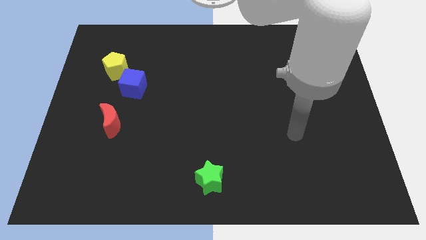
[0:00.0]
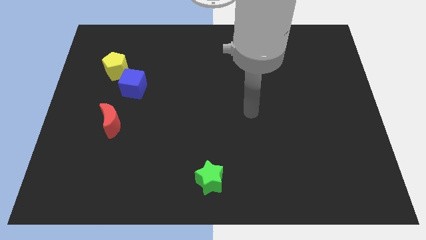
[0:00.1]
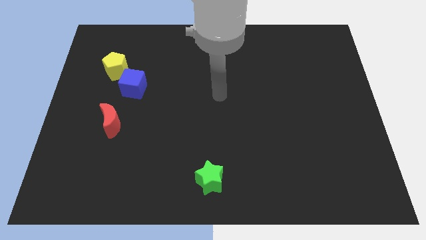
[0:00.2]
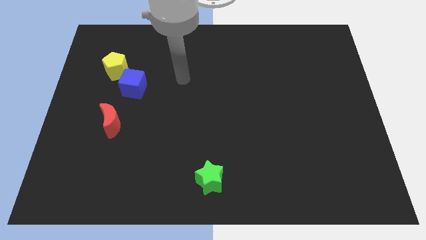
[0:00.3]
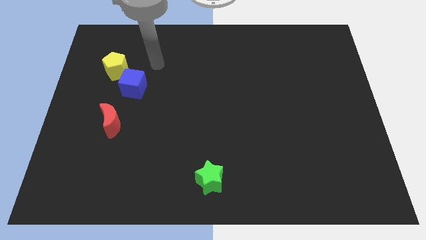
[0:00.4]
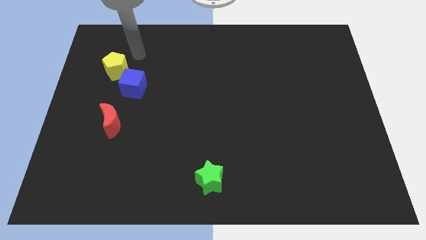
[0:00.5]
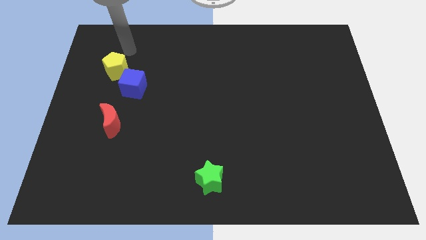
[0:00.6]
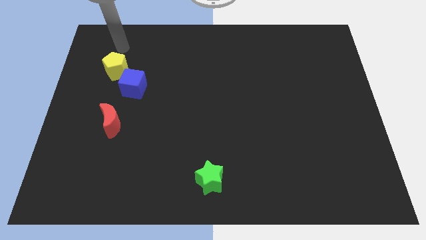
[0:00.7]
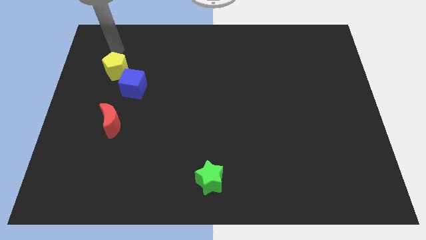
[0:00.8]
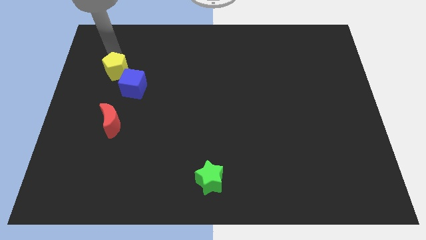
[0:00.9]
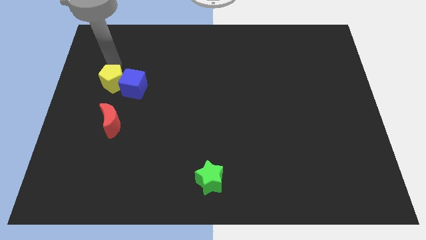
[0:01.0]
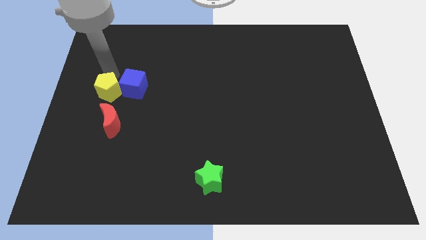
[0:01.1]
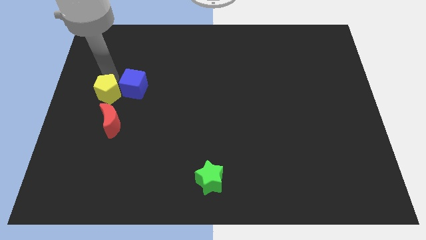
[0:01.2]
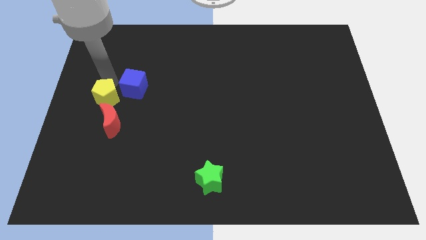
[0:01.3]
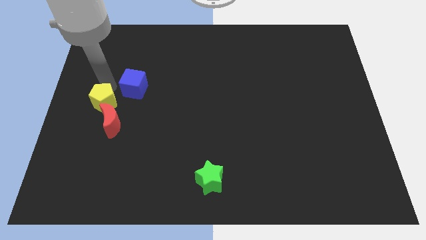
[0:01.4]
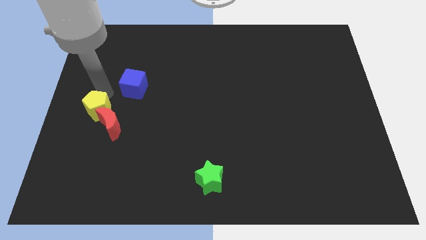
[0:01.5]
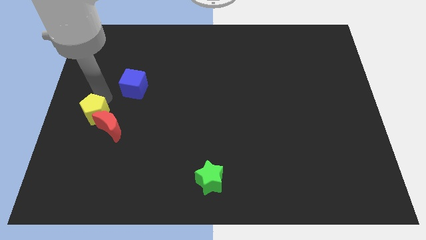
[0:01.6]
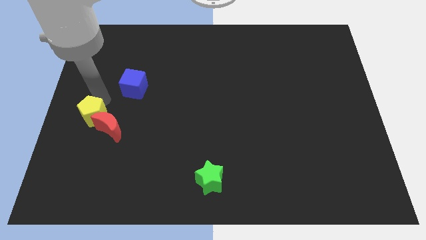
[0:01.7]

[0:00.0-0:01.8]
push the pentagon to the red block

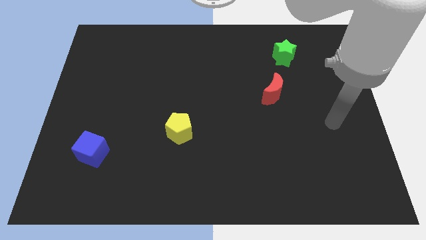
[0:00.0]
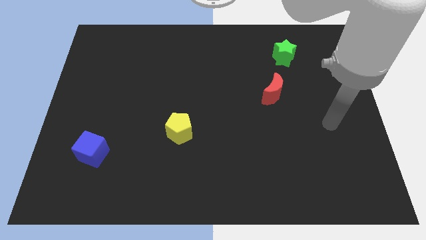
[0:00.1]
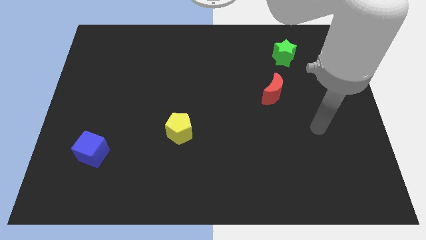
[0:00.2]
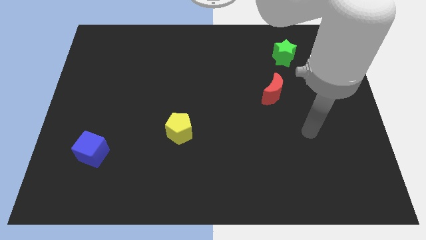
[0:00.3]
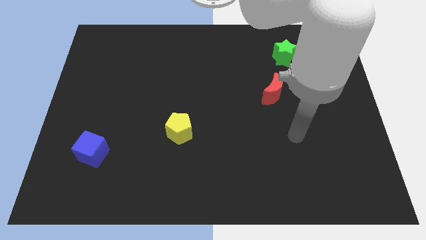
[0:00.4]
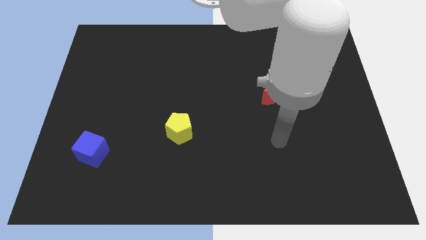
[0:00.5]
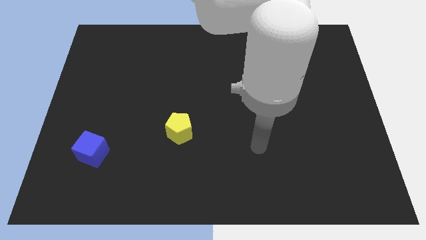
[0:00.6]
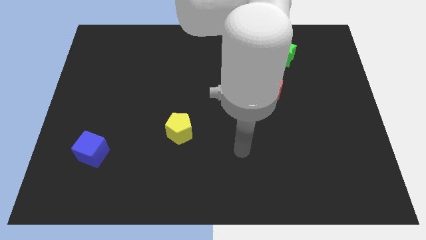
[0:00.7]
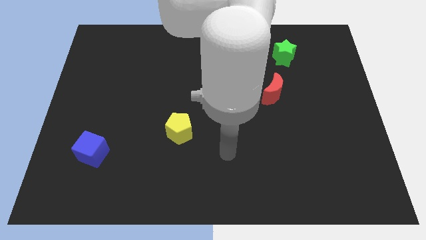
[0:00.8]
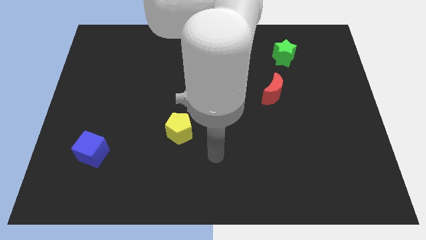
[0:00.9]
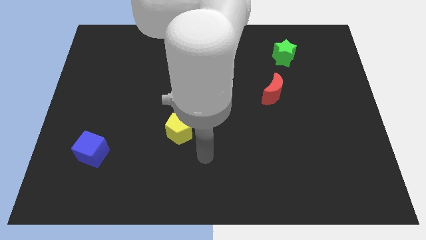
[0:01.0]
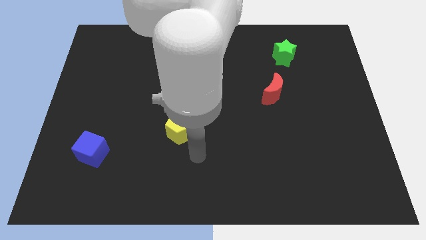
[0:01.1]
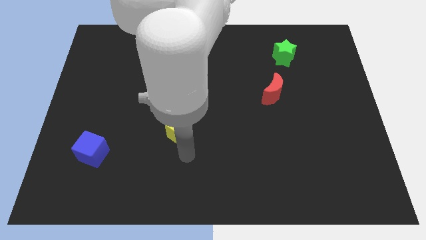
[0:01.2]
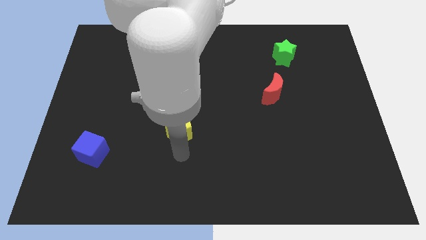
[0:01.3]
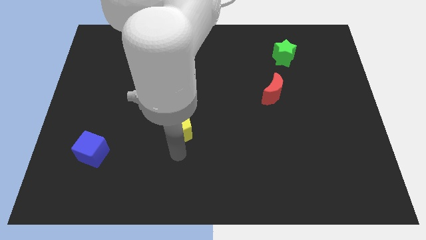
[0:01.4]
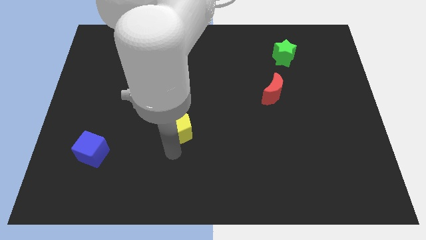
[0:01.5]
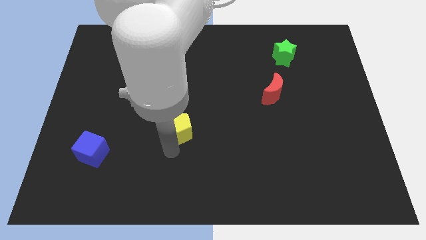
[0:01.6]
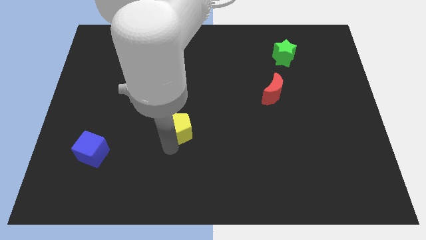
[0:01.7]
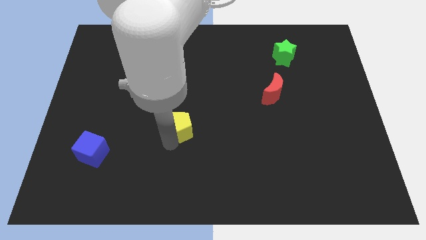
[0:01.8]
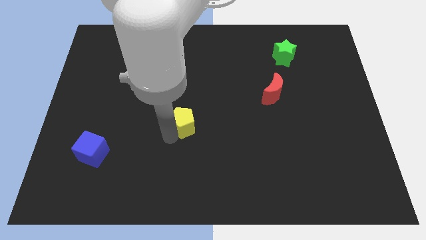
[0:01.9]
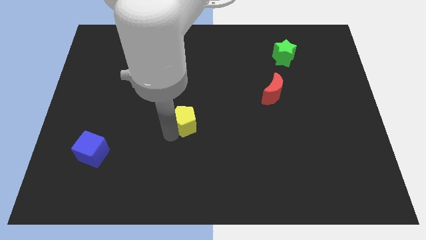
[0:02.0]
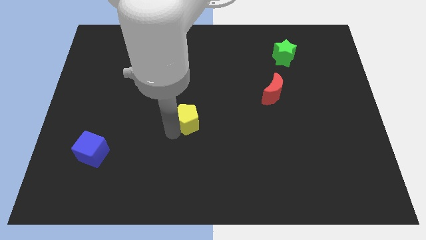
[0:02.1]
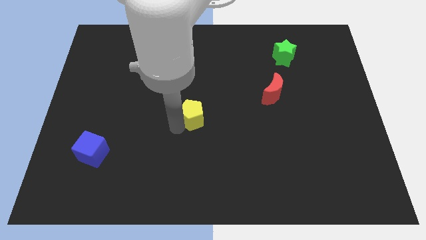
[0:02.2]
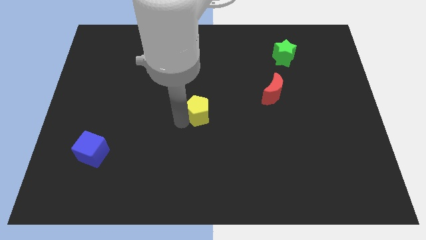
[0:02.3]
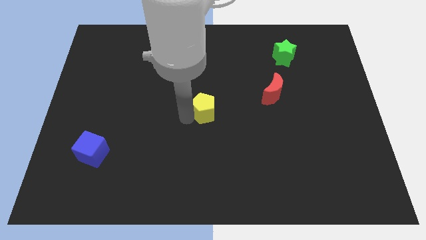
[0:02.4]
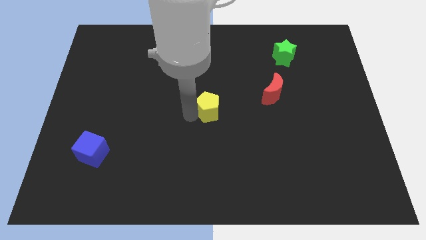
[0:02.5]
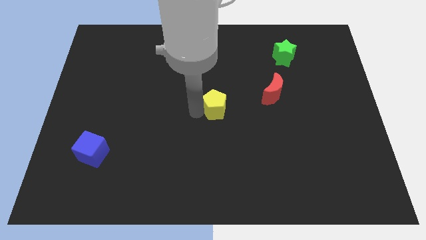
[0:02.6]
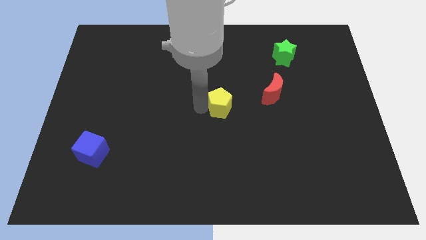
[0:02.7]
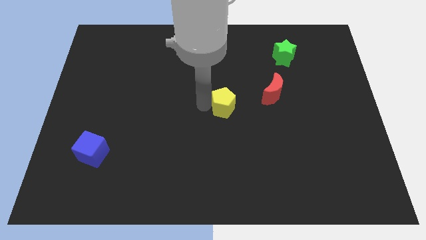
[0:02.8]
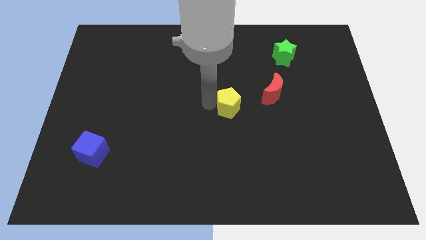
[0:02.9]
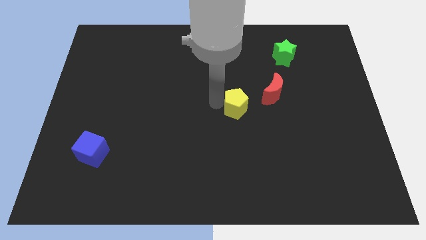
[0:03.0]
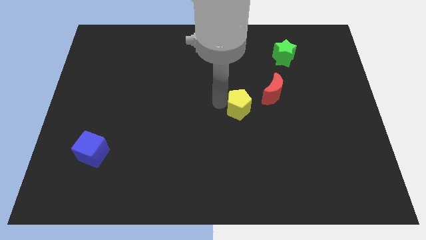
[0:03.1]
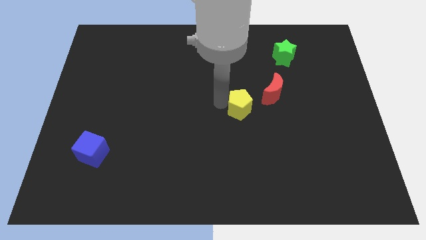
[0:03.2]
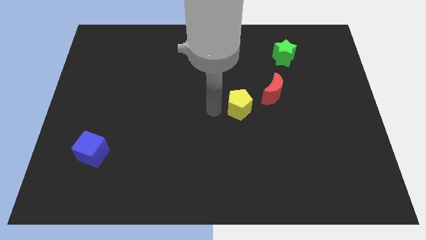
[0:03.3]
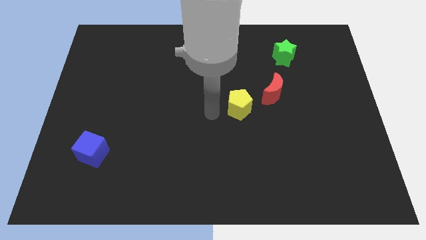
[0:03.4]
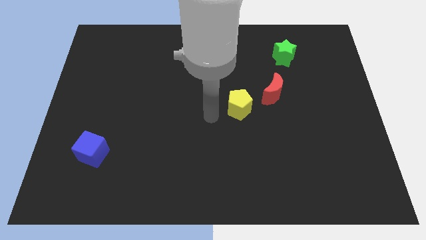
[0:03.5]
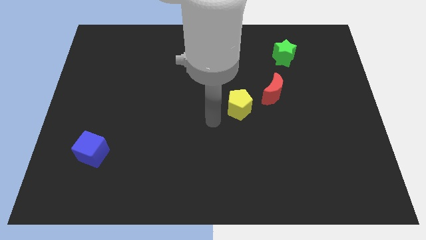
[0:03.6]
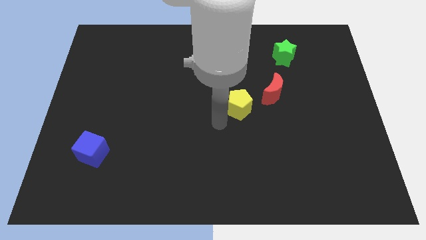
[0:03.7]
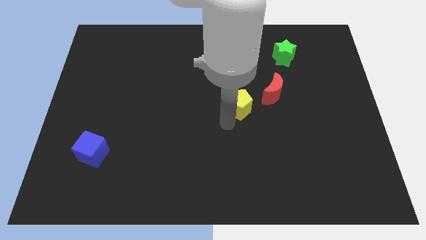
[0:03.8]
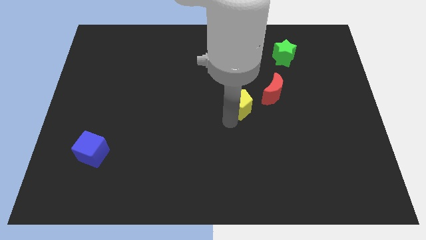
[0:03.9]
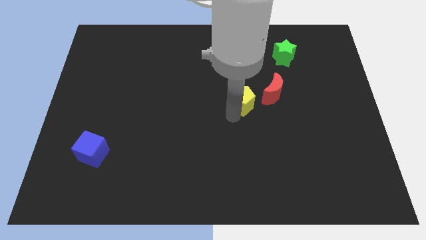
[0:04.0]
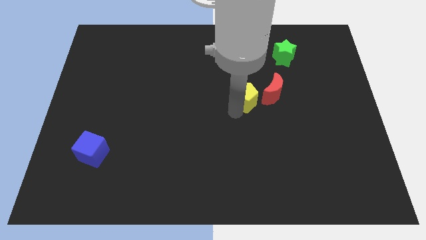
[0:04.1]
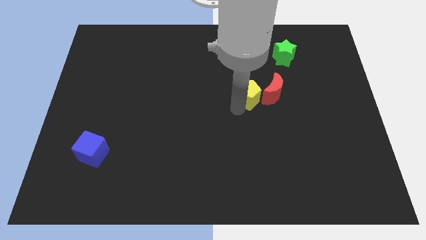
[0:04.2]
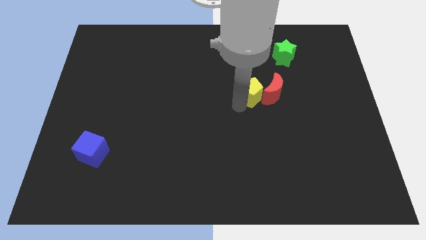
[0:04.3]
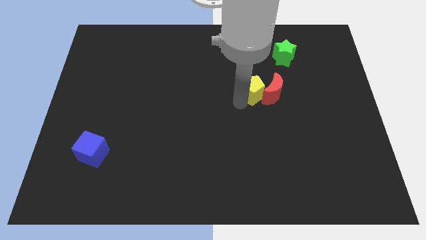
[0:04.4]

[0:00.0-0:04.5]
slide the yellow block close to the red block

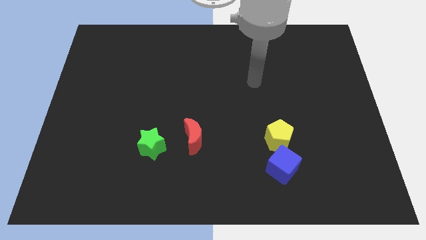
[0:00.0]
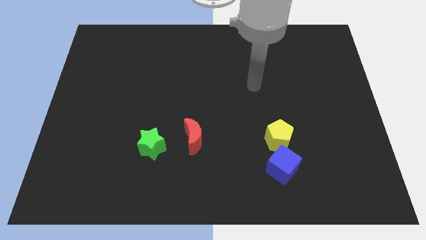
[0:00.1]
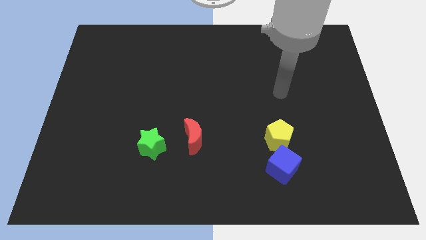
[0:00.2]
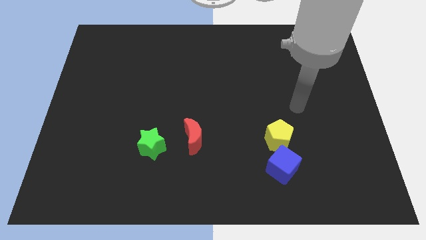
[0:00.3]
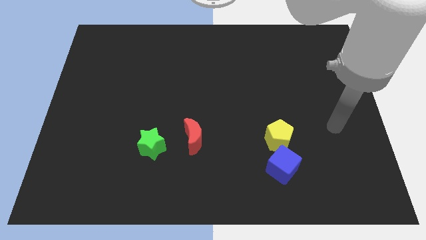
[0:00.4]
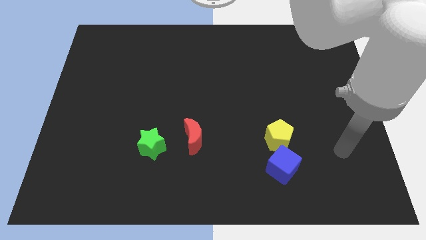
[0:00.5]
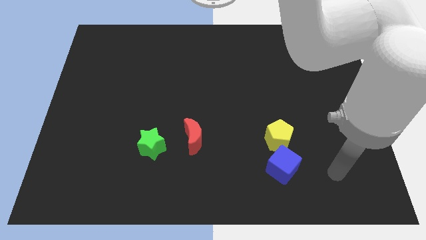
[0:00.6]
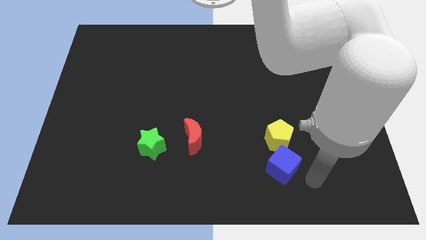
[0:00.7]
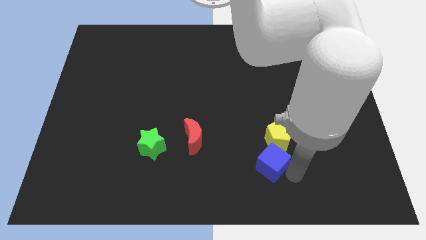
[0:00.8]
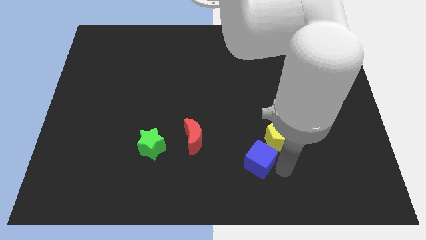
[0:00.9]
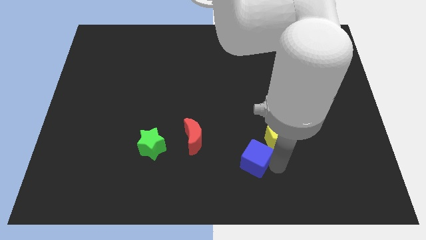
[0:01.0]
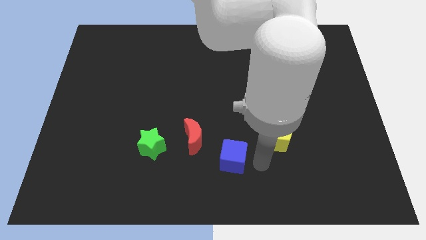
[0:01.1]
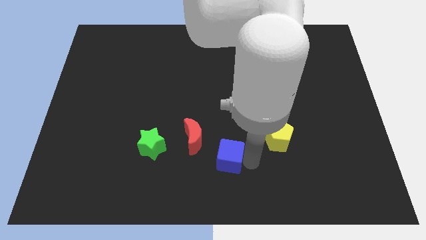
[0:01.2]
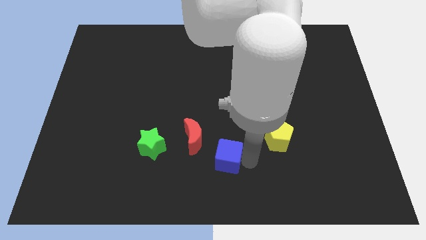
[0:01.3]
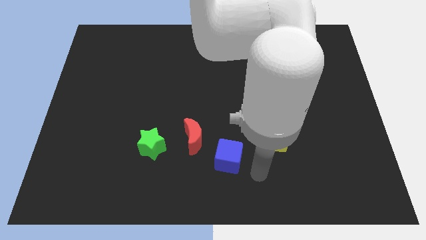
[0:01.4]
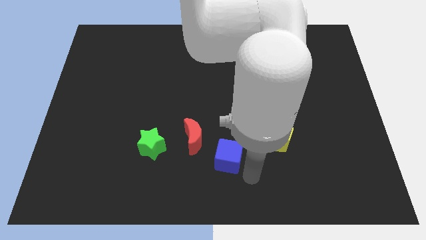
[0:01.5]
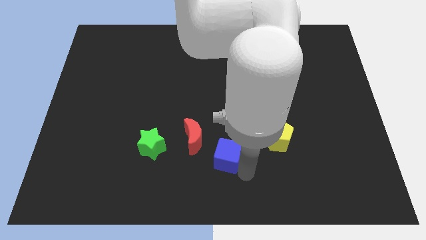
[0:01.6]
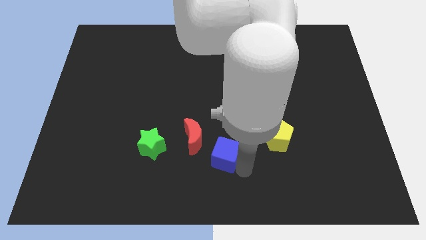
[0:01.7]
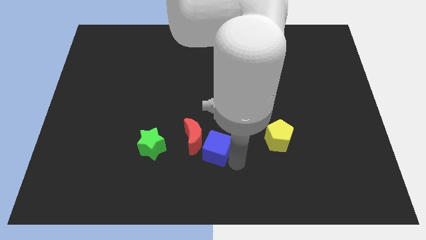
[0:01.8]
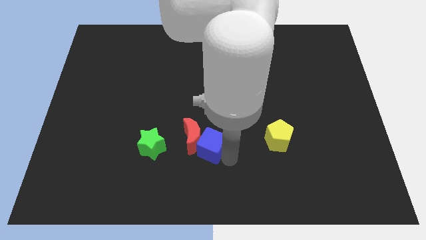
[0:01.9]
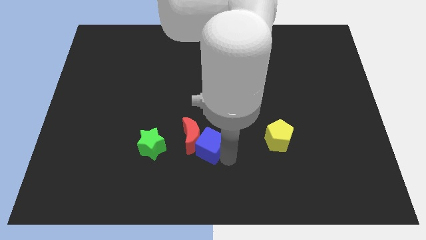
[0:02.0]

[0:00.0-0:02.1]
push the cube to the red block

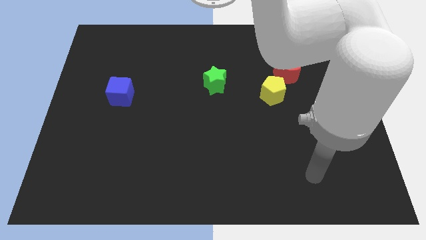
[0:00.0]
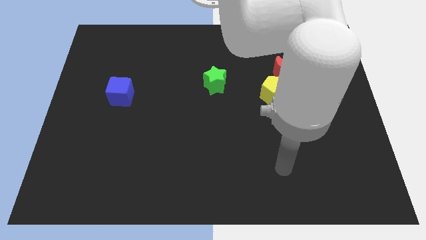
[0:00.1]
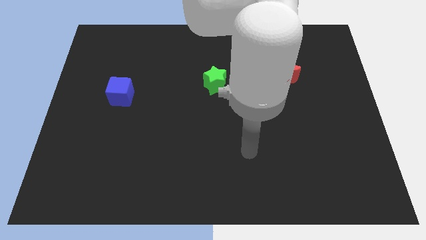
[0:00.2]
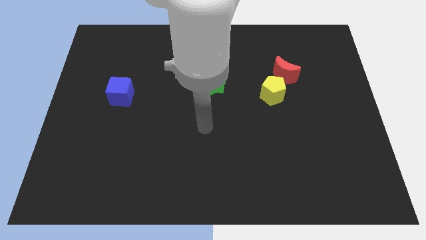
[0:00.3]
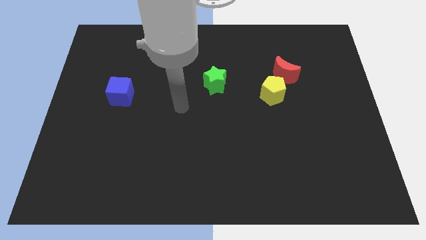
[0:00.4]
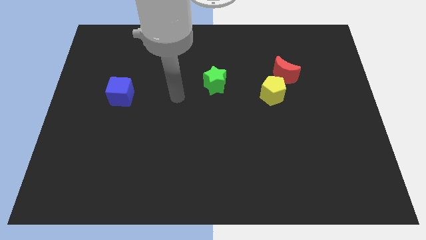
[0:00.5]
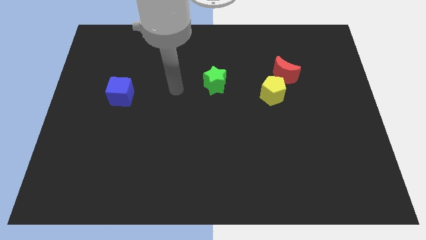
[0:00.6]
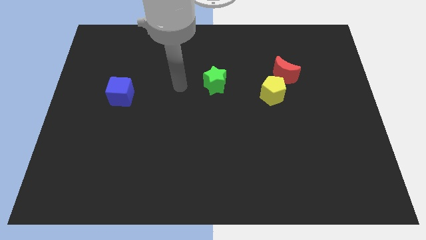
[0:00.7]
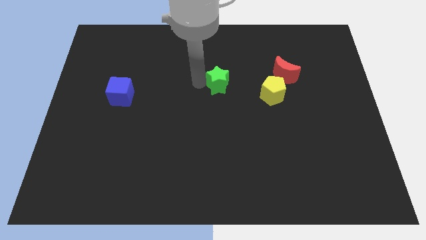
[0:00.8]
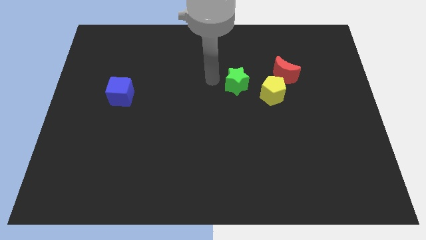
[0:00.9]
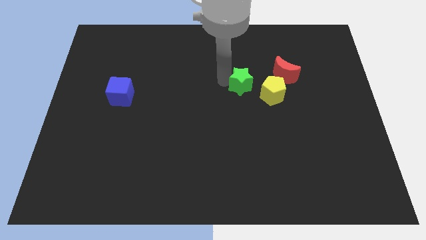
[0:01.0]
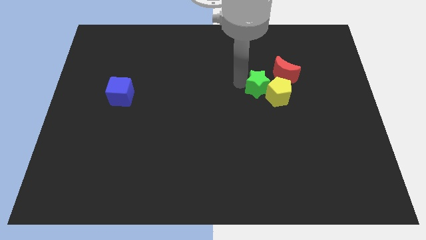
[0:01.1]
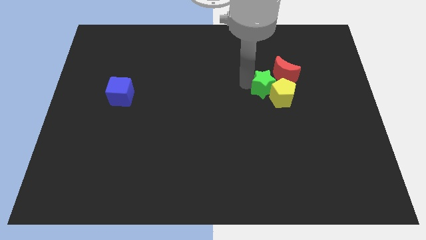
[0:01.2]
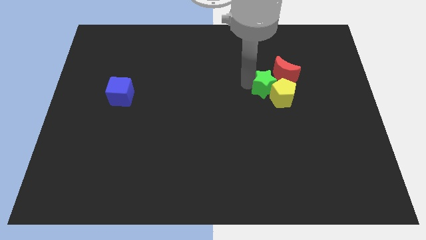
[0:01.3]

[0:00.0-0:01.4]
put the green block close to the yellow pentagon
